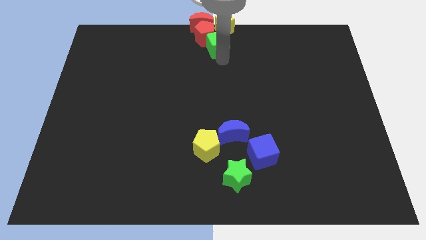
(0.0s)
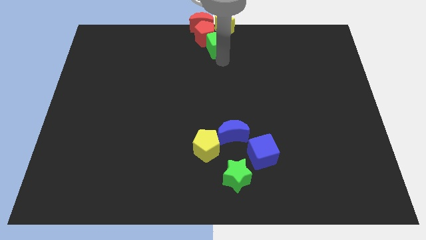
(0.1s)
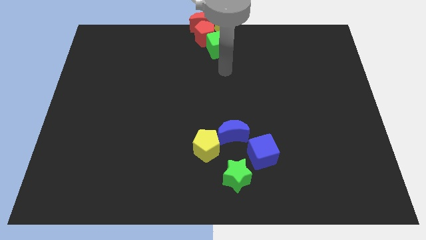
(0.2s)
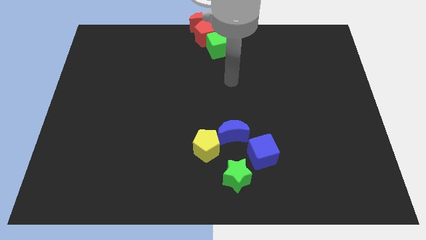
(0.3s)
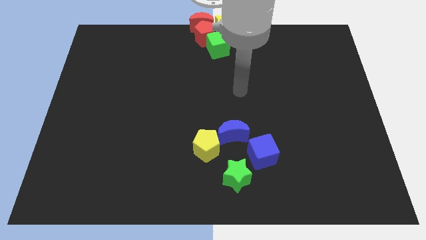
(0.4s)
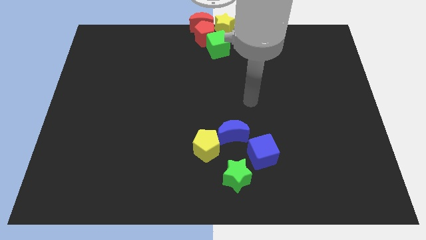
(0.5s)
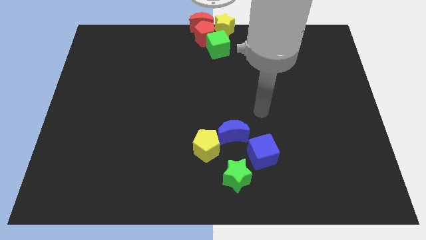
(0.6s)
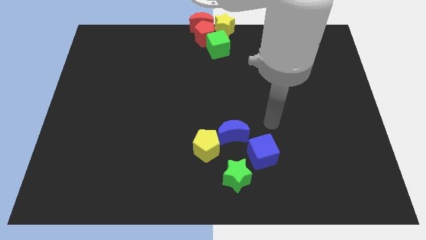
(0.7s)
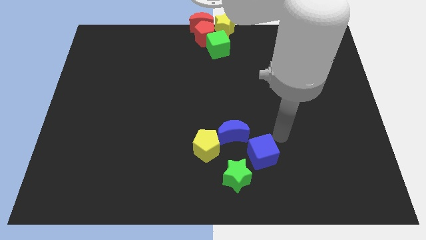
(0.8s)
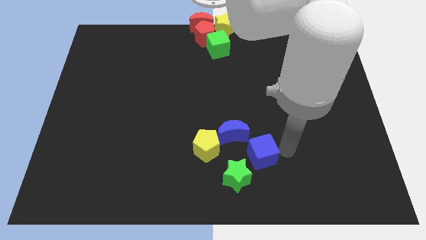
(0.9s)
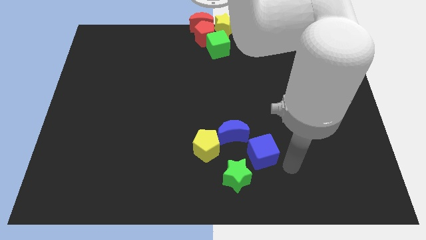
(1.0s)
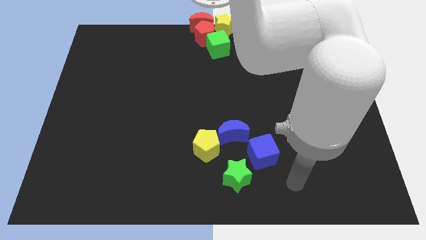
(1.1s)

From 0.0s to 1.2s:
move the arm away from the green cube

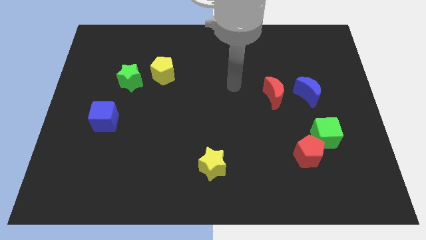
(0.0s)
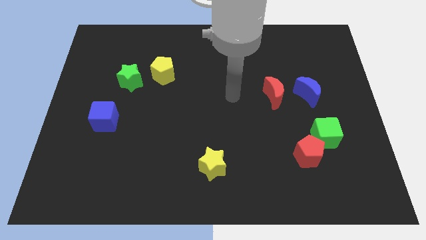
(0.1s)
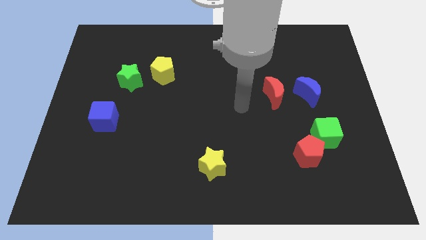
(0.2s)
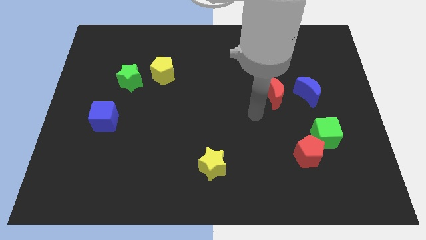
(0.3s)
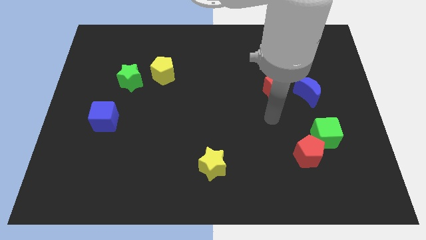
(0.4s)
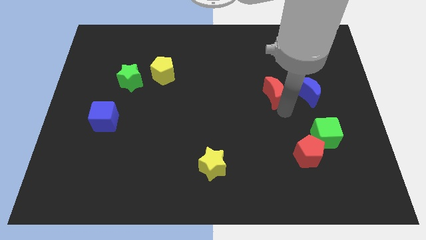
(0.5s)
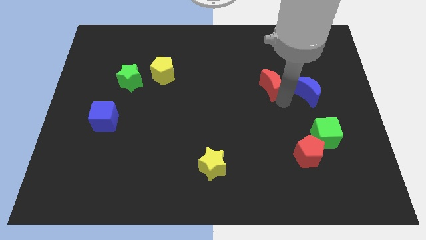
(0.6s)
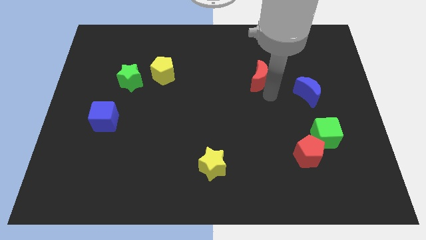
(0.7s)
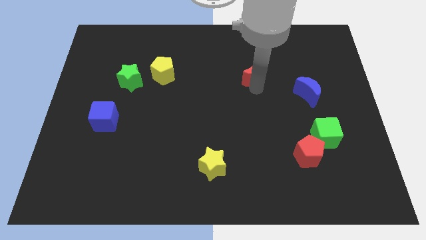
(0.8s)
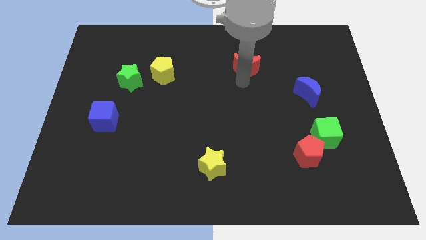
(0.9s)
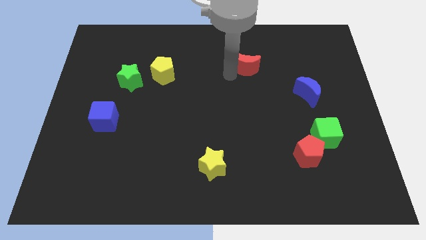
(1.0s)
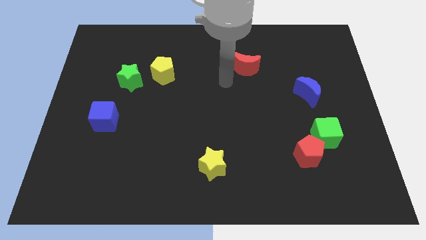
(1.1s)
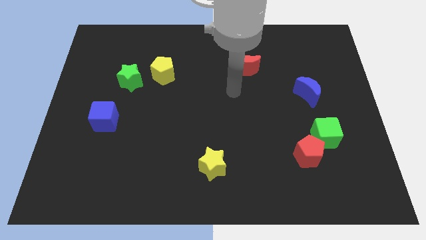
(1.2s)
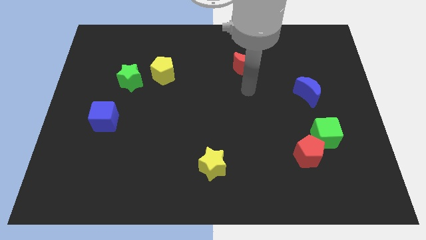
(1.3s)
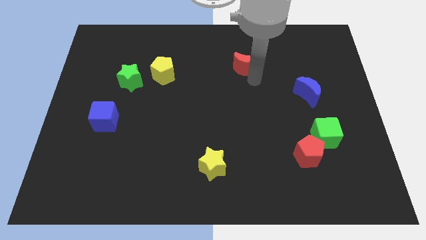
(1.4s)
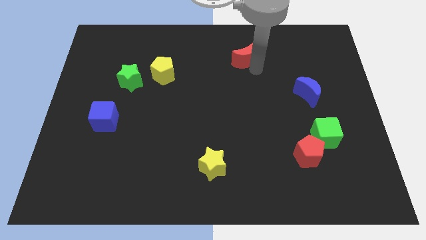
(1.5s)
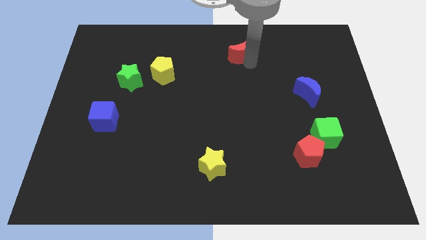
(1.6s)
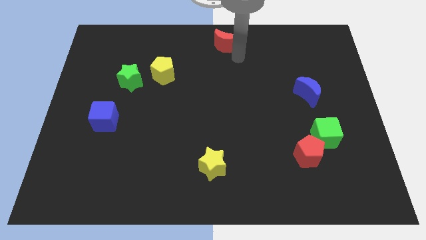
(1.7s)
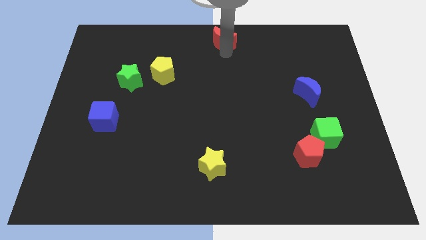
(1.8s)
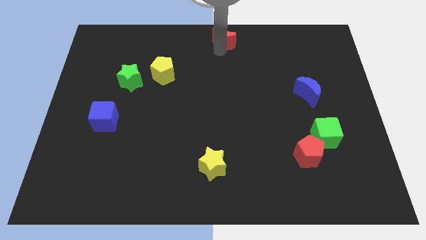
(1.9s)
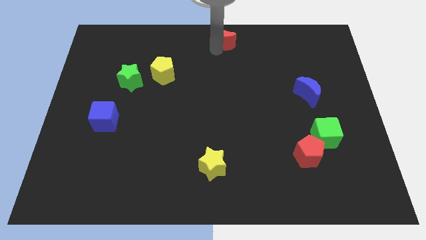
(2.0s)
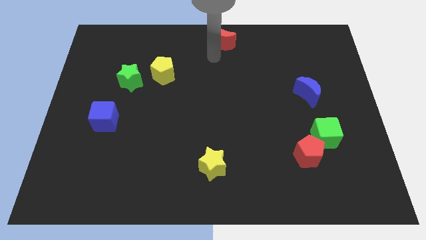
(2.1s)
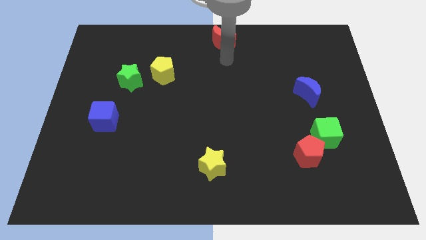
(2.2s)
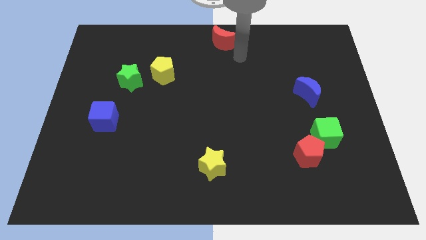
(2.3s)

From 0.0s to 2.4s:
push the red crescent to the top center of the board

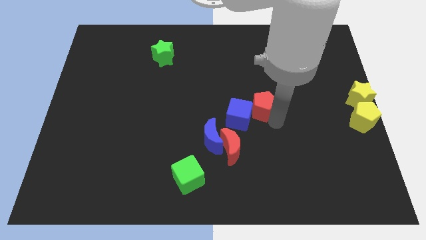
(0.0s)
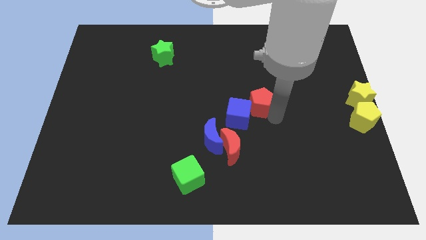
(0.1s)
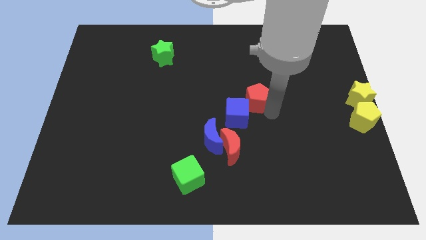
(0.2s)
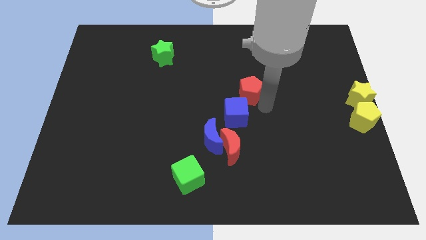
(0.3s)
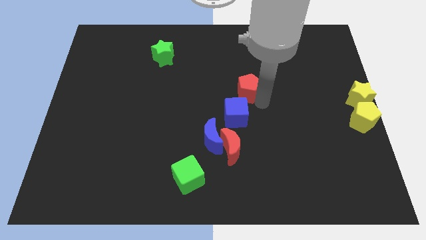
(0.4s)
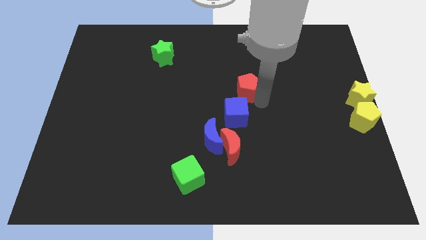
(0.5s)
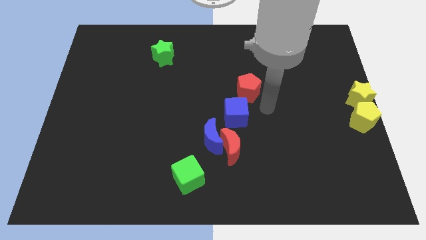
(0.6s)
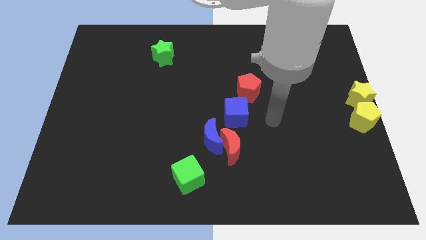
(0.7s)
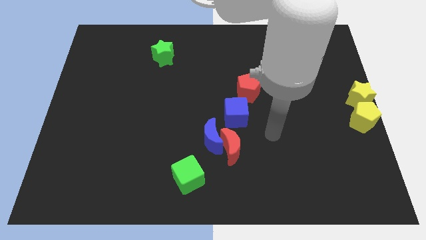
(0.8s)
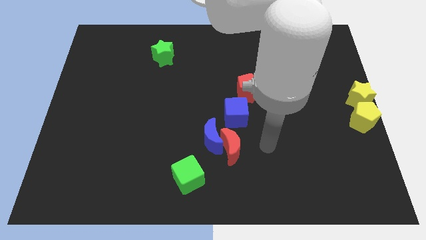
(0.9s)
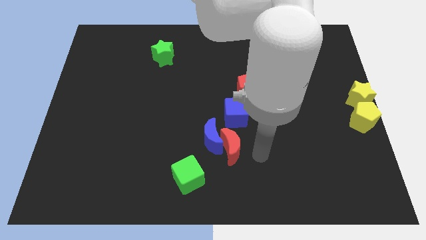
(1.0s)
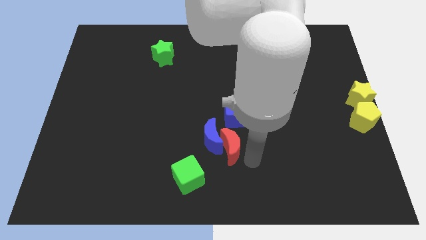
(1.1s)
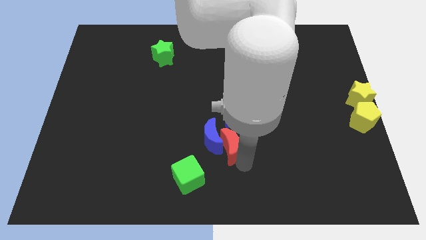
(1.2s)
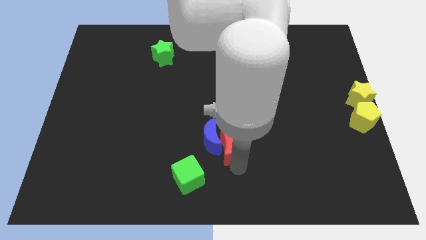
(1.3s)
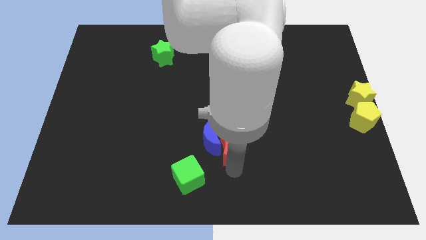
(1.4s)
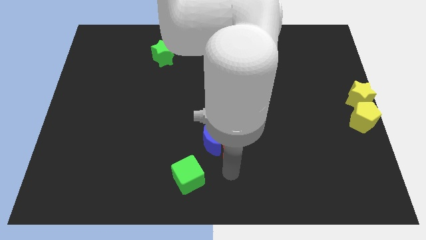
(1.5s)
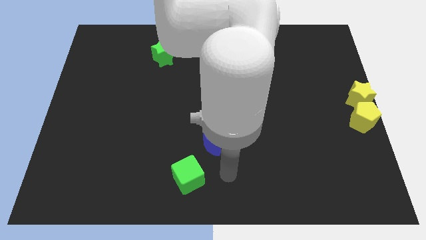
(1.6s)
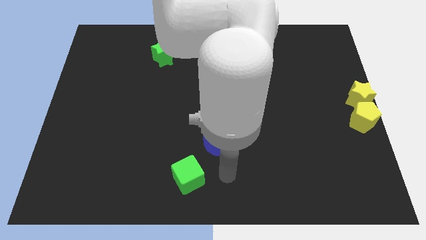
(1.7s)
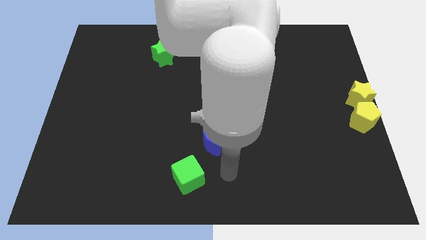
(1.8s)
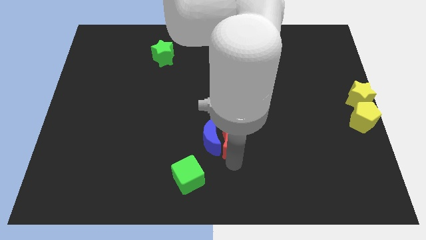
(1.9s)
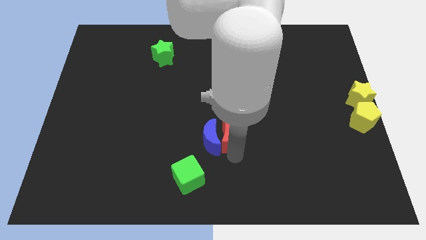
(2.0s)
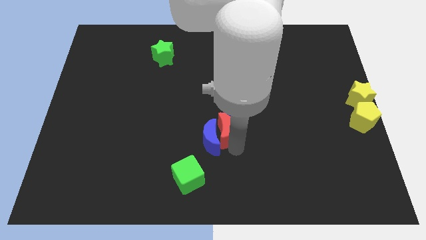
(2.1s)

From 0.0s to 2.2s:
move your arm away from red pentagon

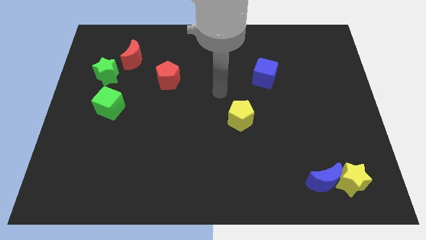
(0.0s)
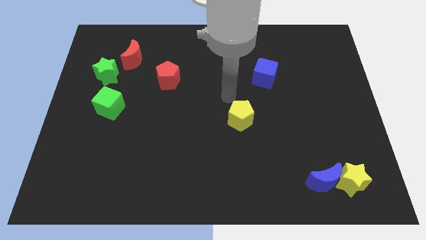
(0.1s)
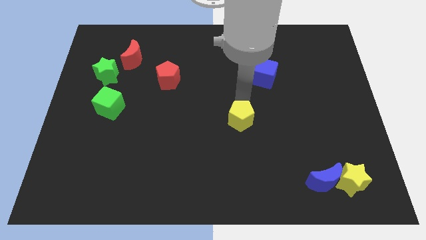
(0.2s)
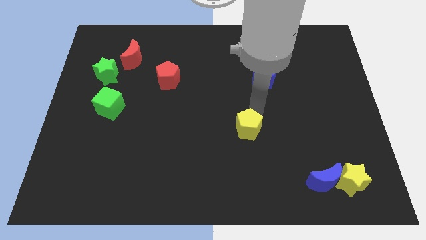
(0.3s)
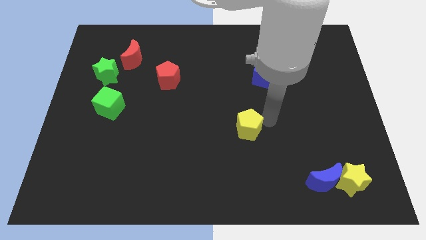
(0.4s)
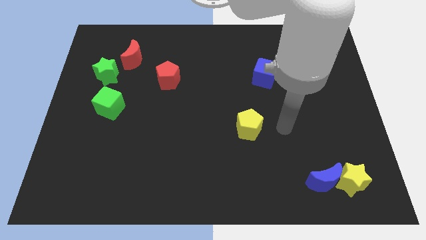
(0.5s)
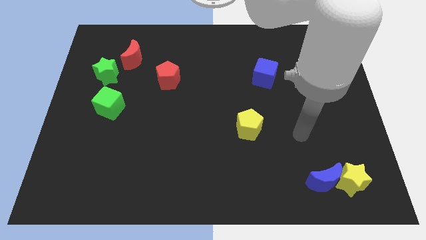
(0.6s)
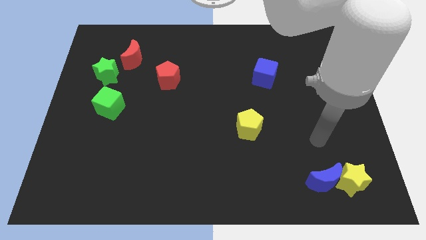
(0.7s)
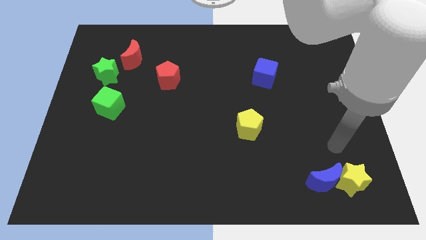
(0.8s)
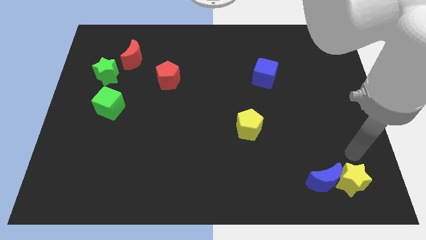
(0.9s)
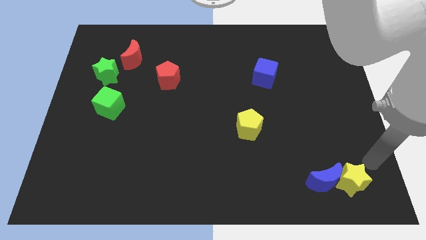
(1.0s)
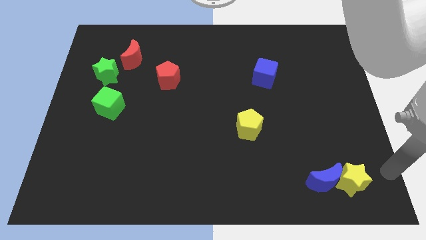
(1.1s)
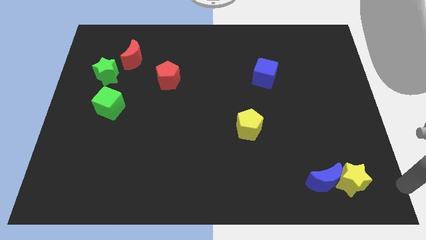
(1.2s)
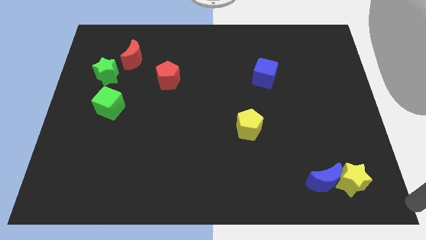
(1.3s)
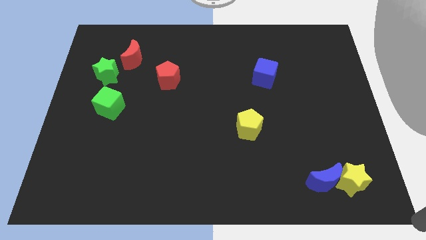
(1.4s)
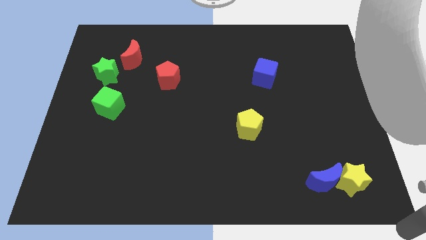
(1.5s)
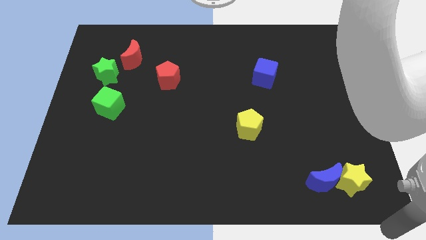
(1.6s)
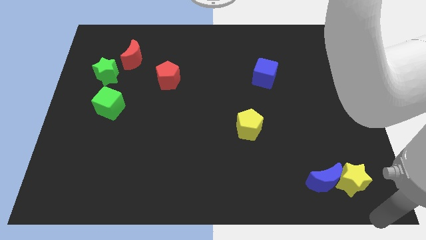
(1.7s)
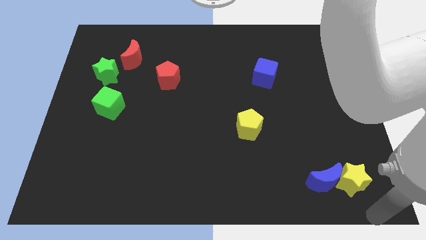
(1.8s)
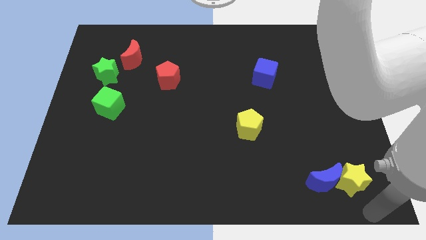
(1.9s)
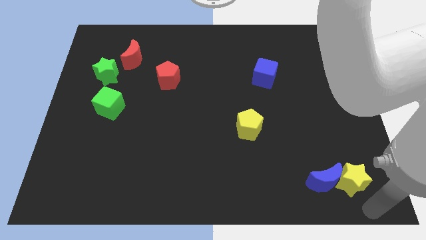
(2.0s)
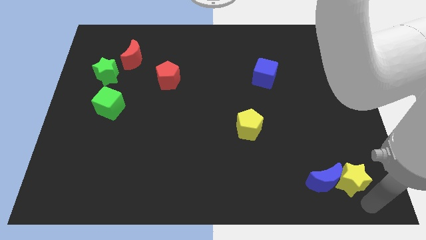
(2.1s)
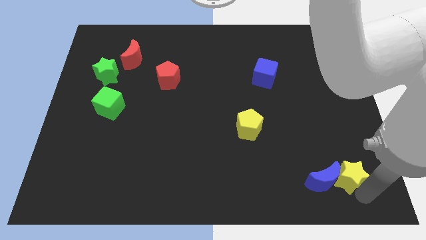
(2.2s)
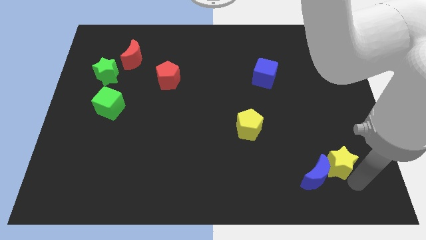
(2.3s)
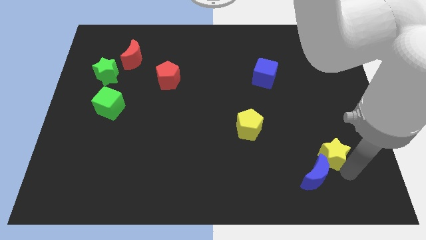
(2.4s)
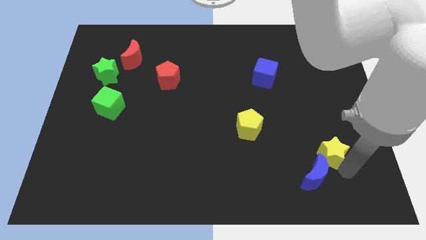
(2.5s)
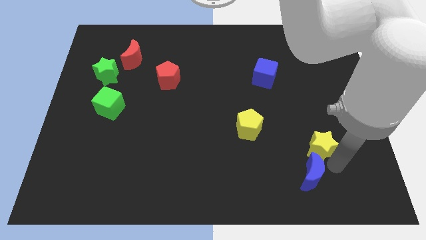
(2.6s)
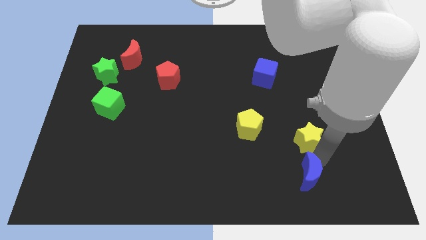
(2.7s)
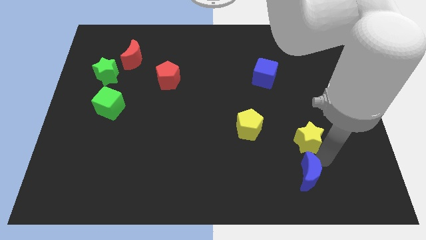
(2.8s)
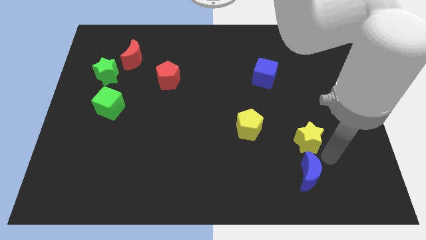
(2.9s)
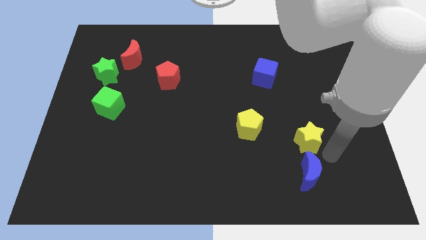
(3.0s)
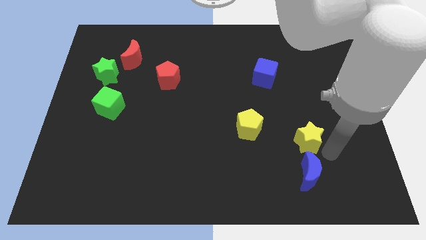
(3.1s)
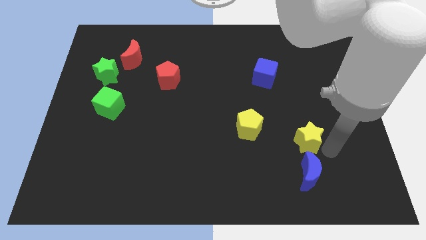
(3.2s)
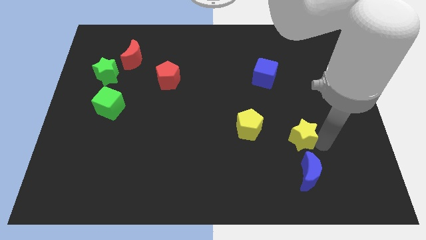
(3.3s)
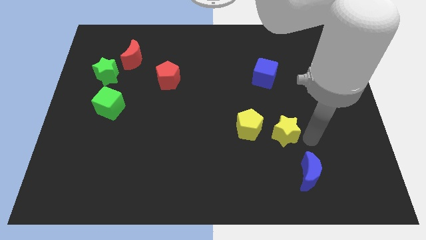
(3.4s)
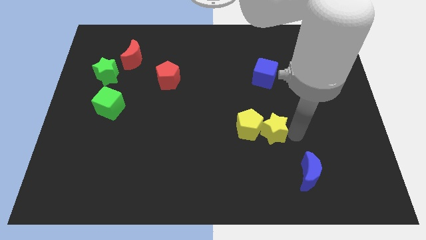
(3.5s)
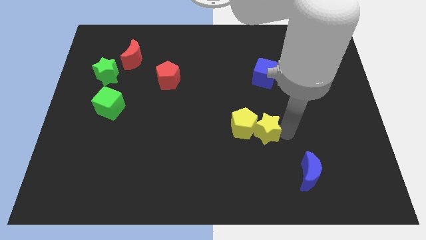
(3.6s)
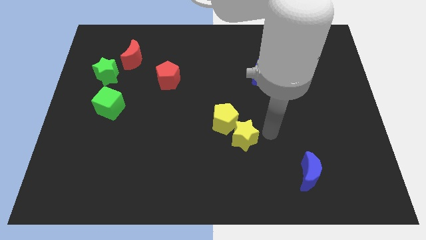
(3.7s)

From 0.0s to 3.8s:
push the yellow pentagon using yellow star to the center of the board
